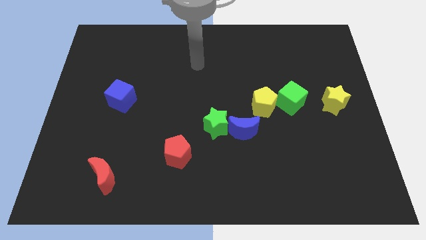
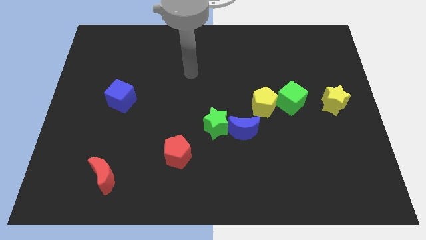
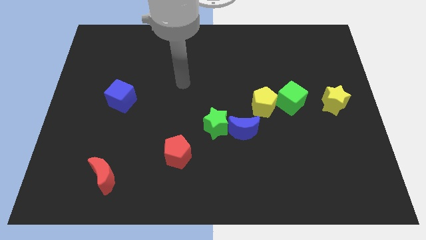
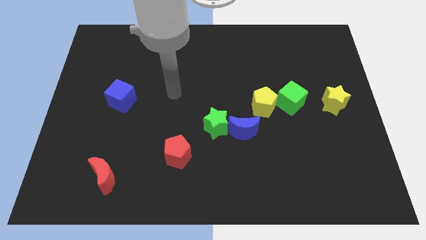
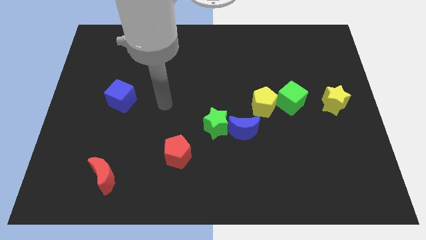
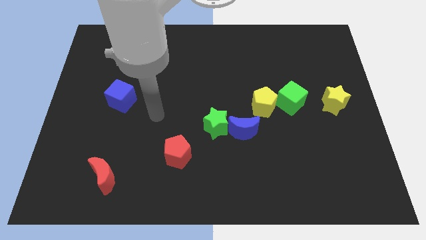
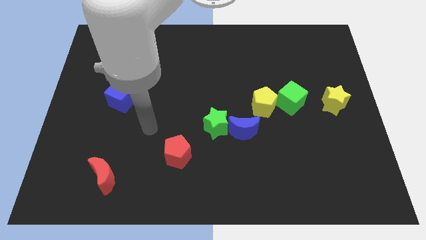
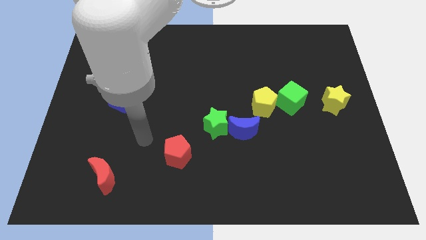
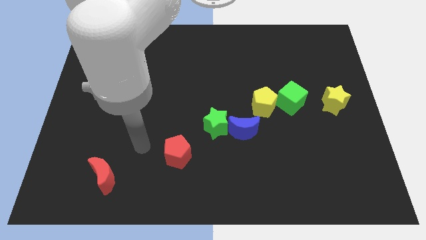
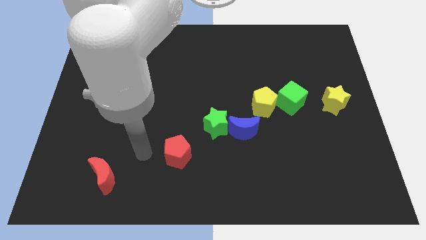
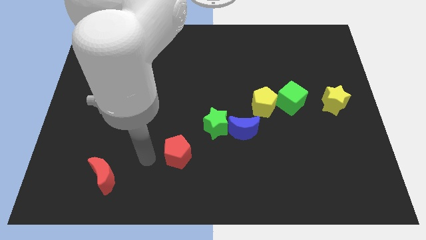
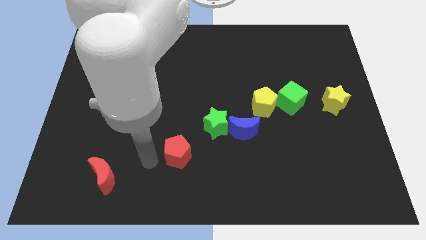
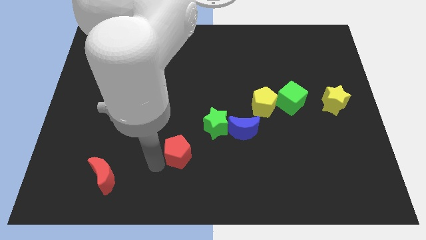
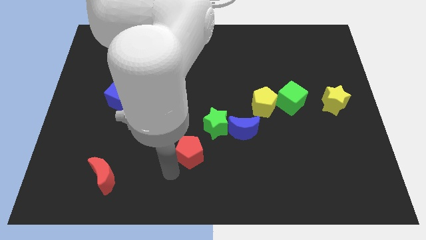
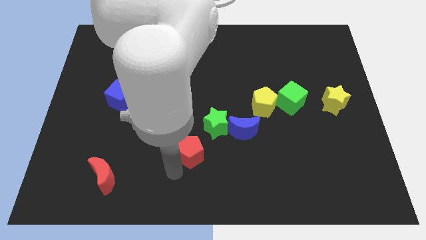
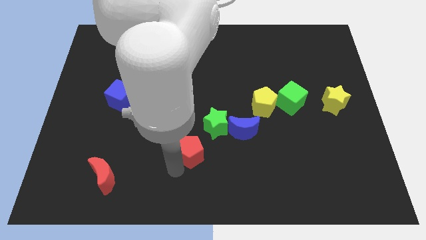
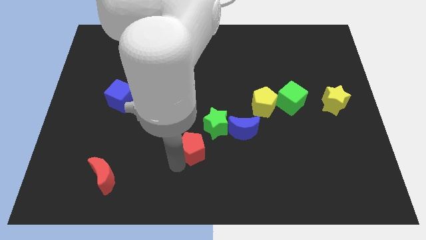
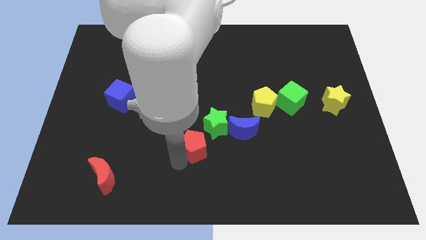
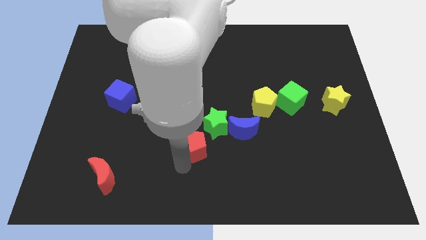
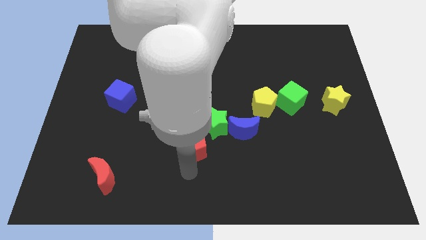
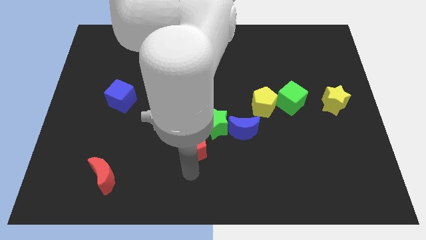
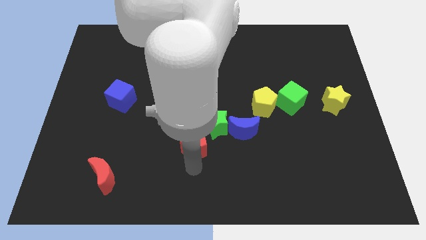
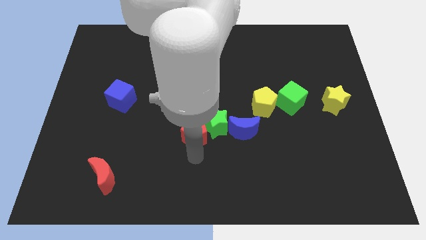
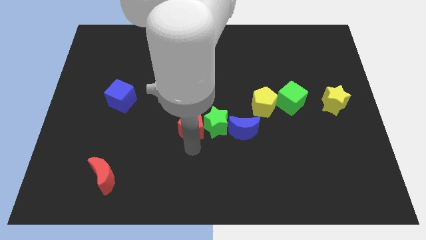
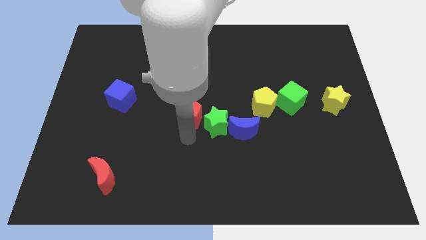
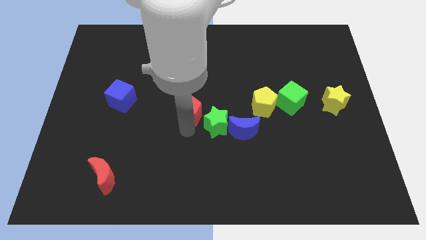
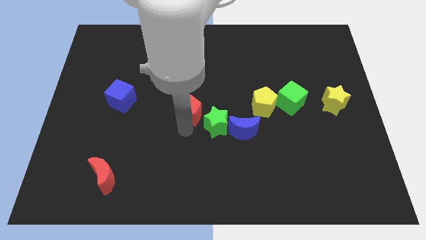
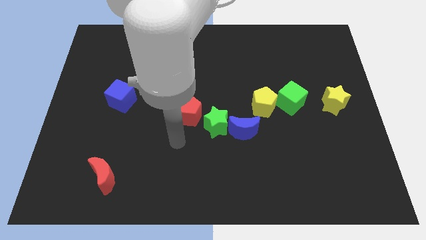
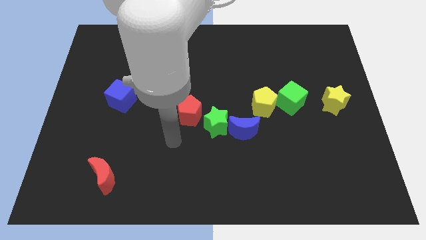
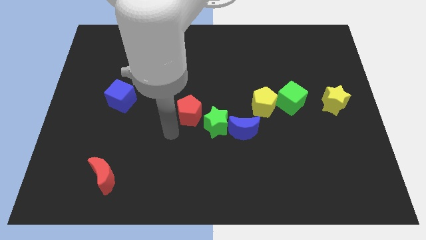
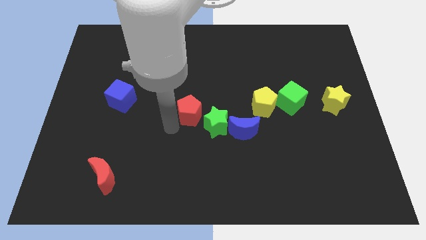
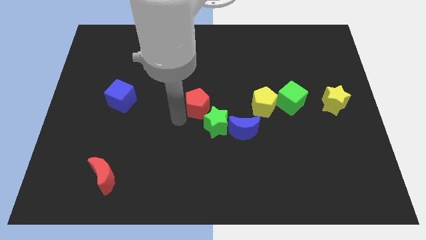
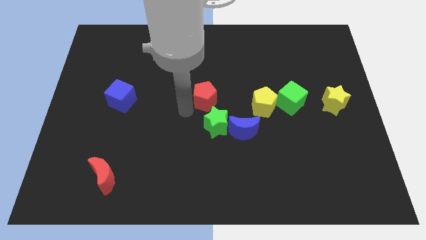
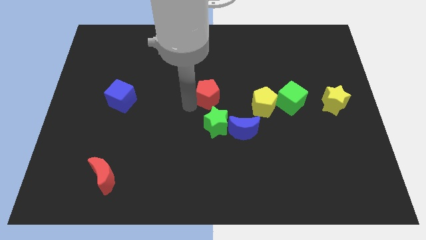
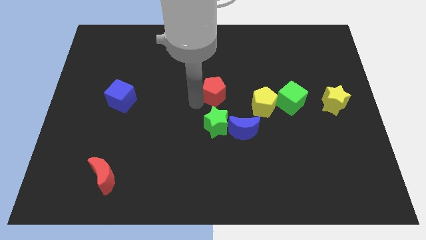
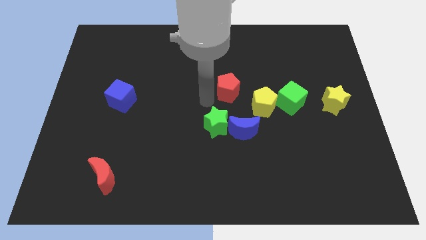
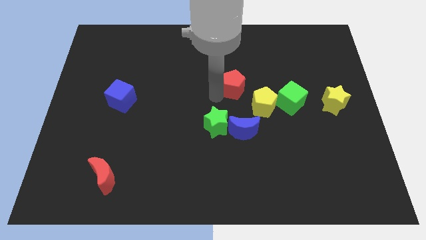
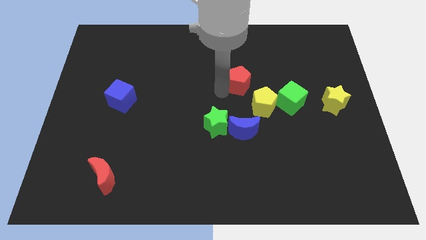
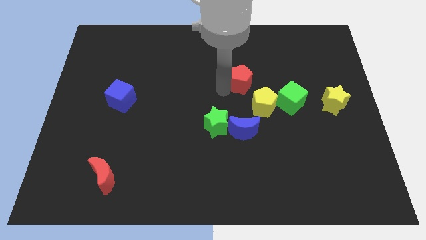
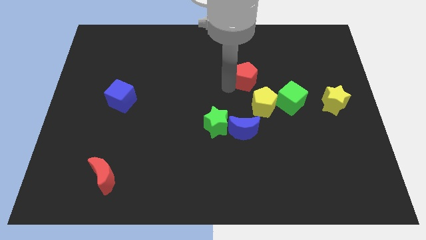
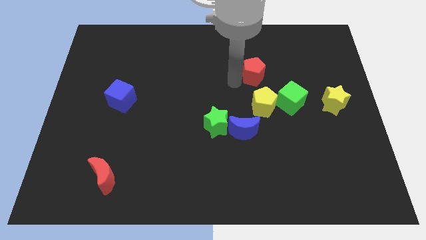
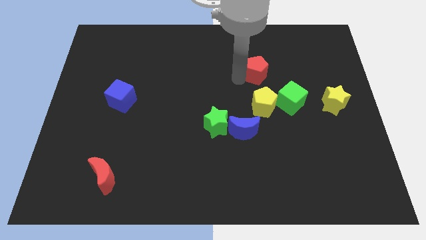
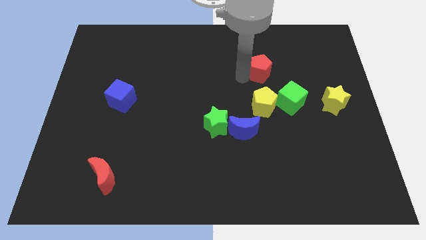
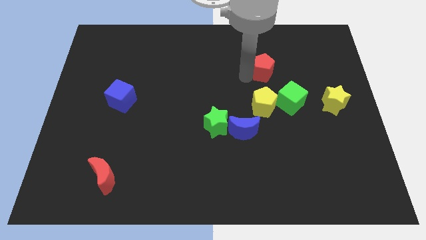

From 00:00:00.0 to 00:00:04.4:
put the red pentagon above the yellow pentagon

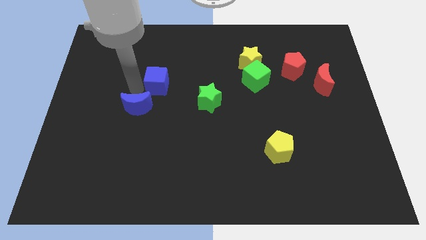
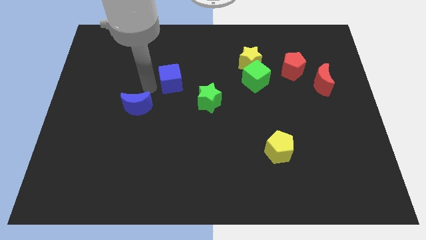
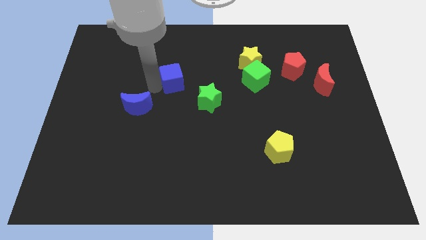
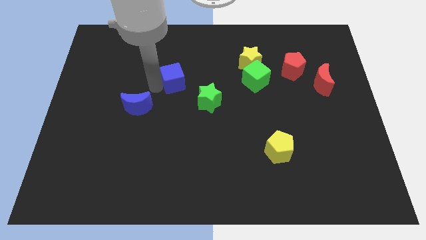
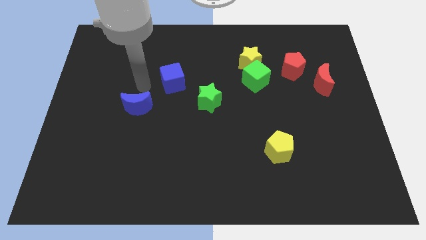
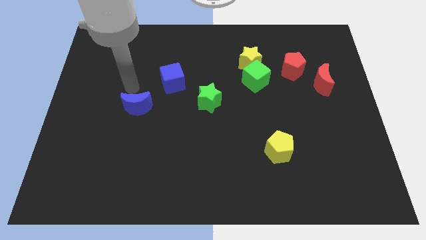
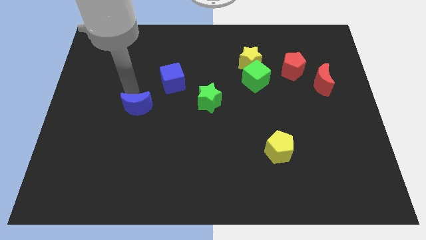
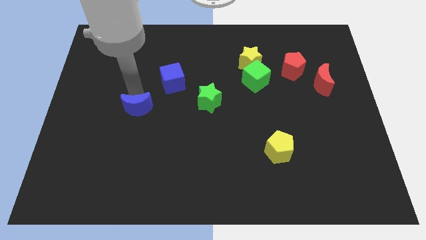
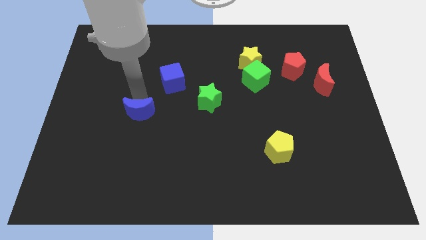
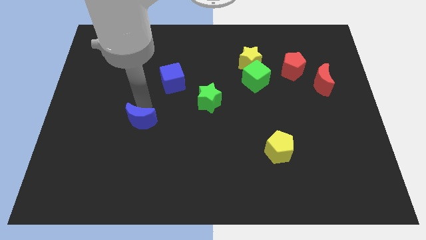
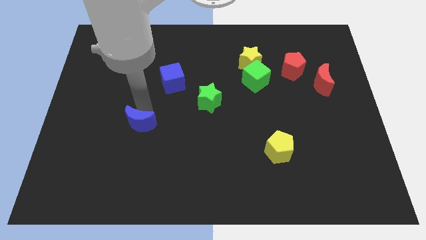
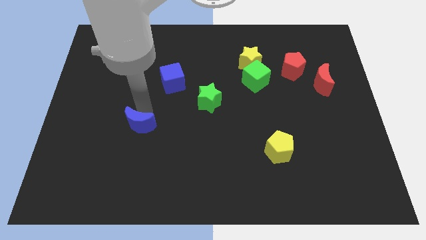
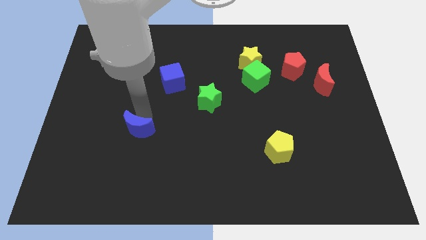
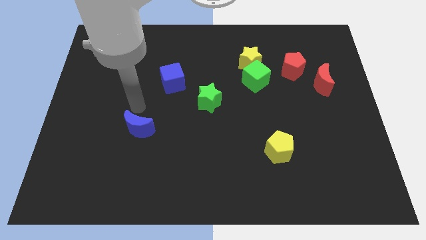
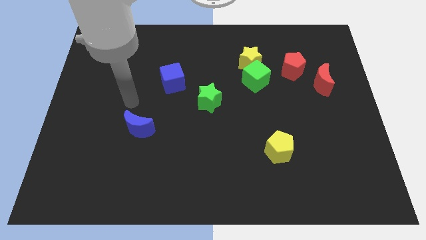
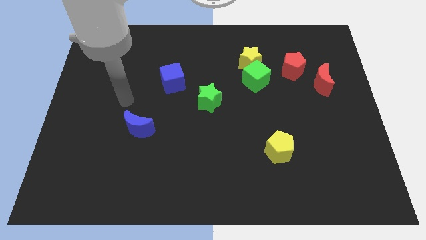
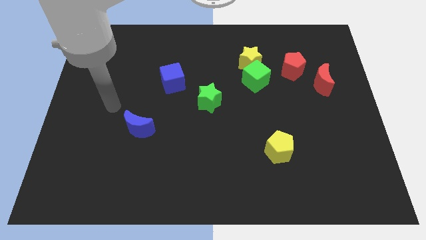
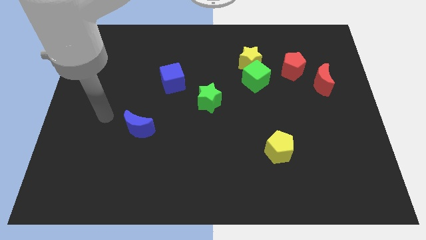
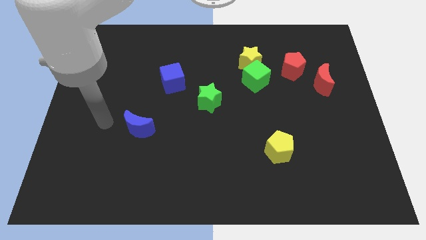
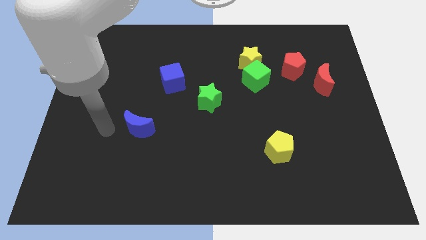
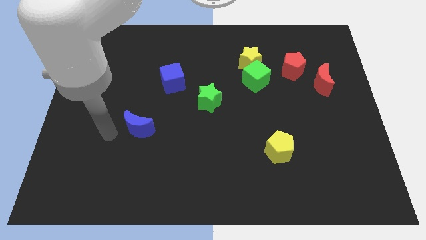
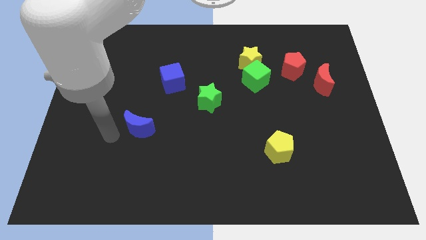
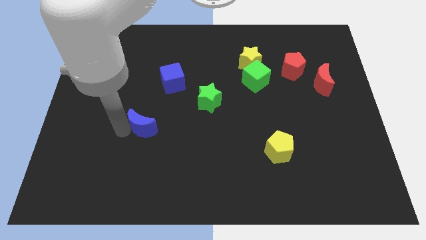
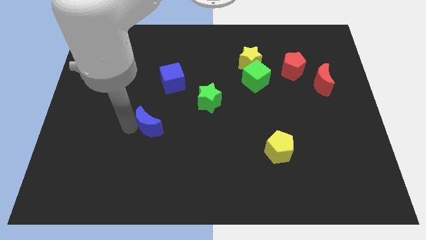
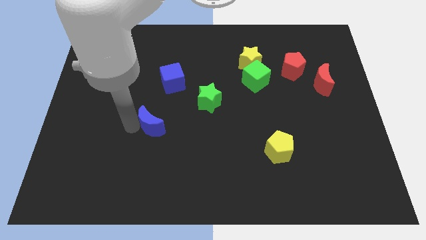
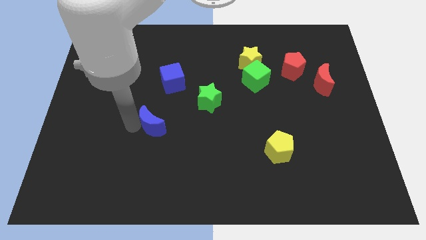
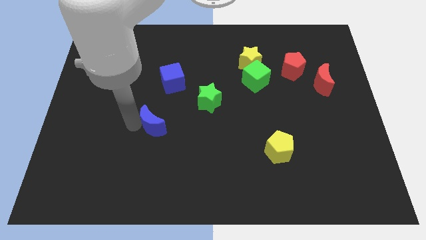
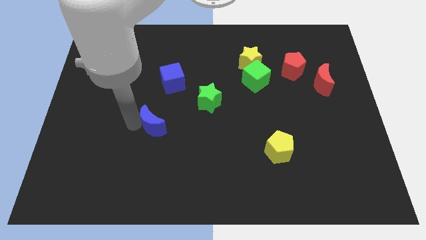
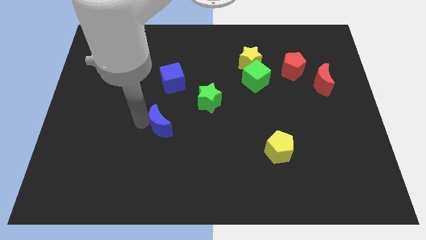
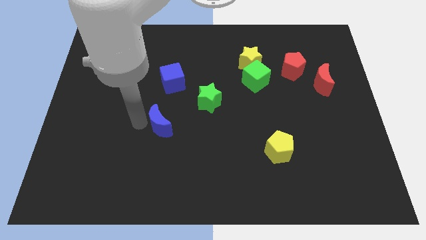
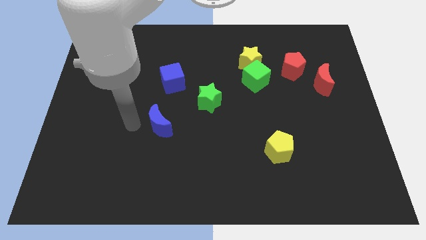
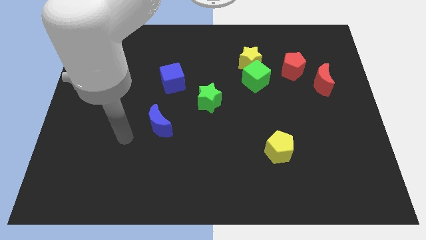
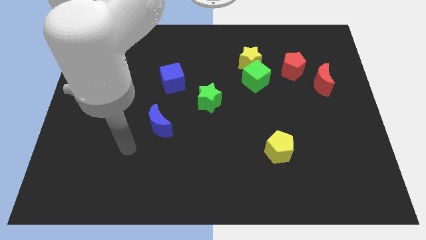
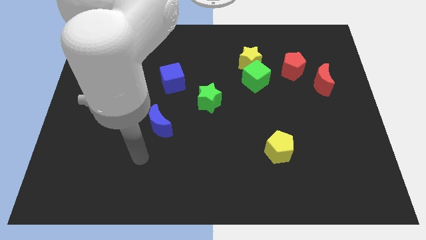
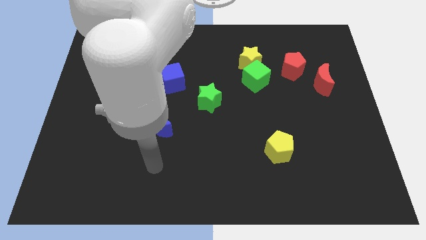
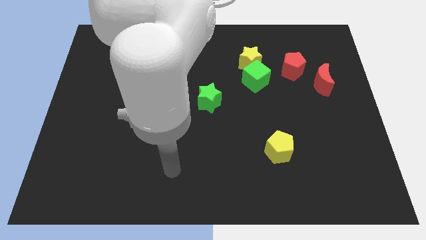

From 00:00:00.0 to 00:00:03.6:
separate the blue moon from the blue cube

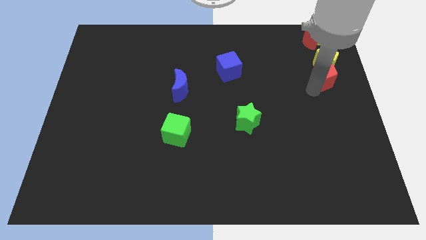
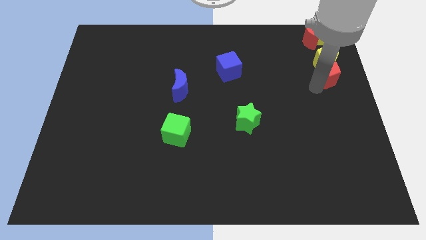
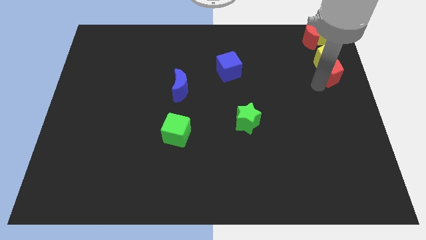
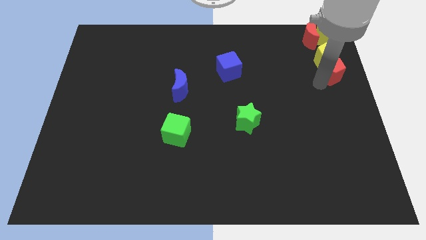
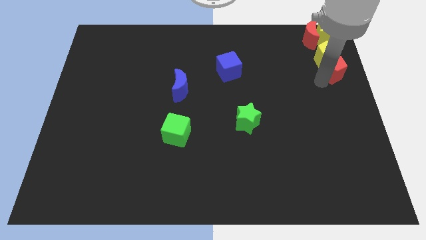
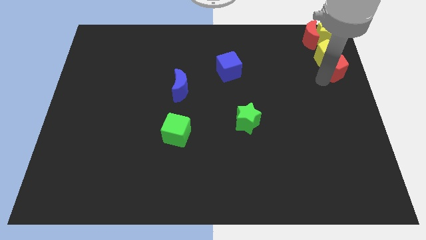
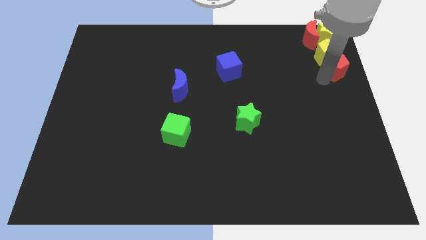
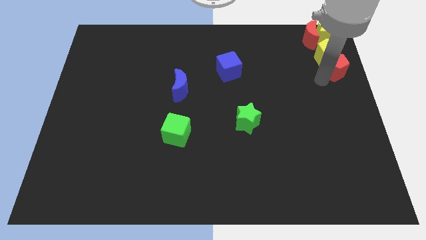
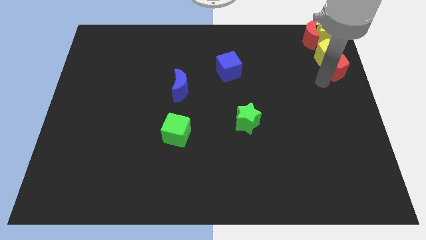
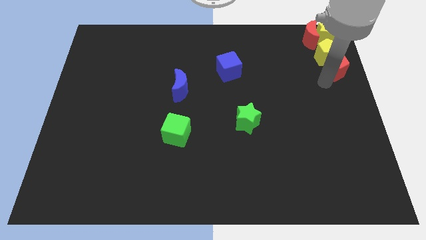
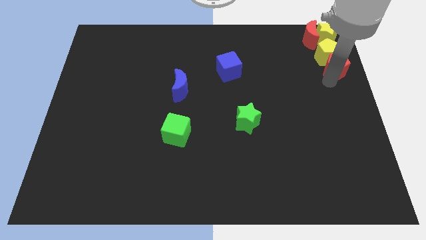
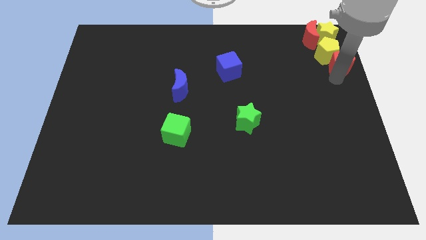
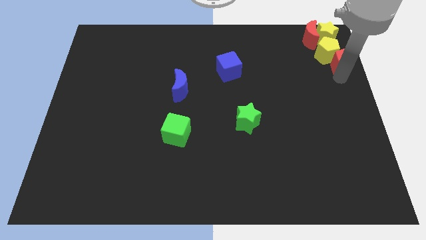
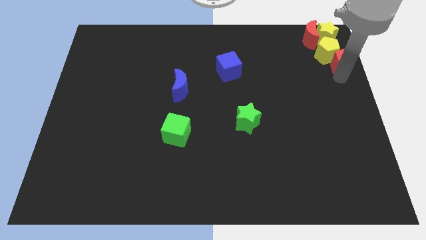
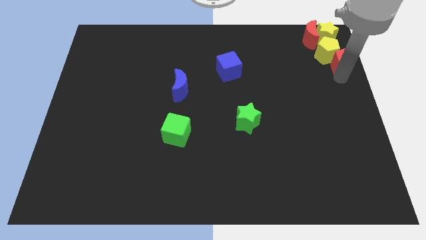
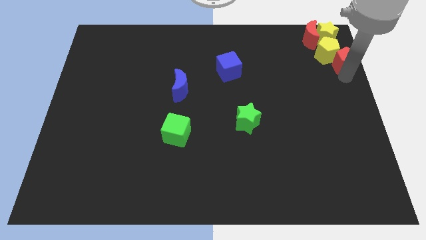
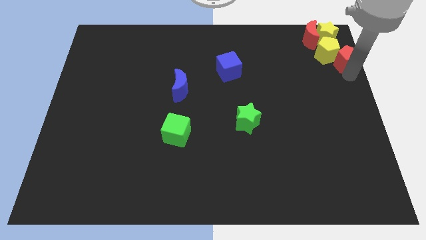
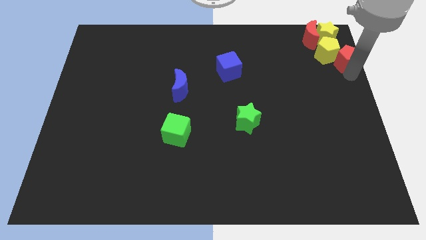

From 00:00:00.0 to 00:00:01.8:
move red pentagon slightly upwards
